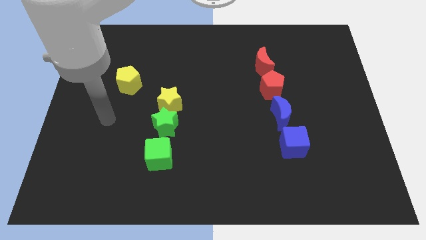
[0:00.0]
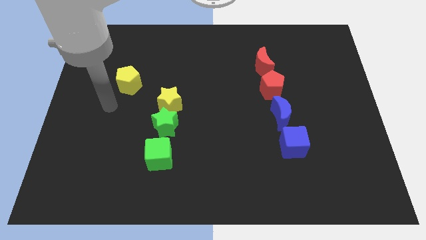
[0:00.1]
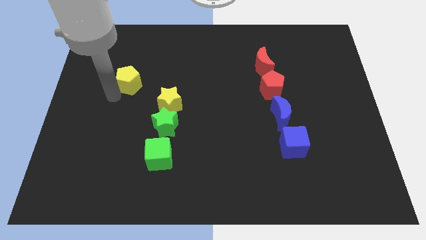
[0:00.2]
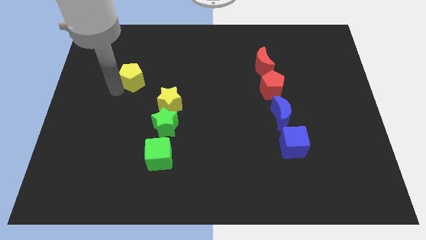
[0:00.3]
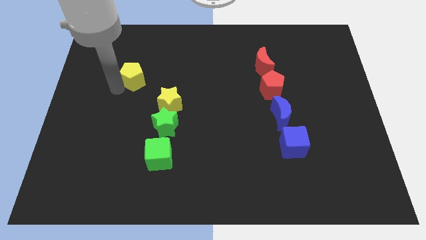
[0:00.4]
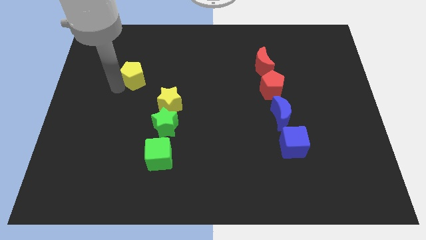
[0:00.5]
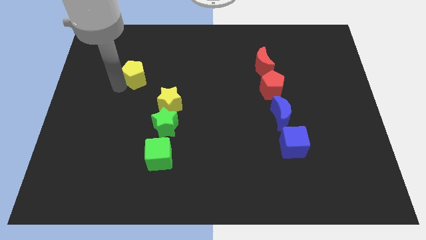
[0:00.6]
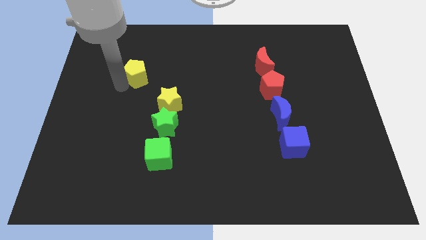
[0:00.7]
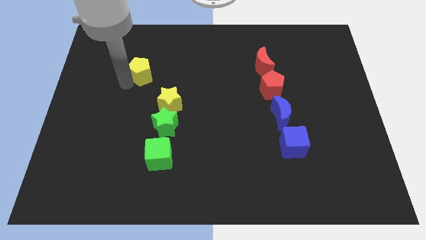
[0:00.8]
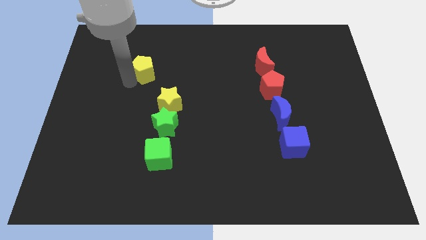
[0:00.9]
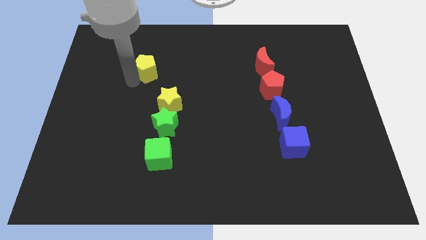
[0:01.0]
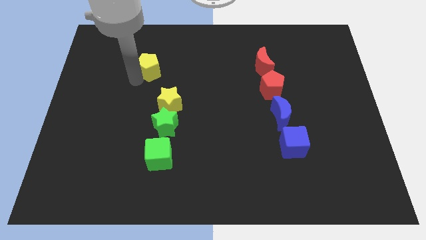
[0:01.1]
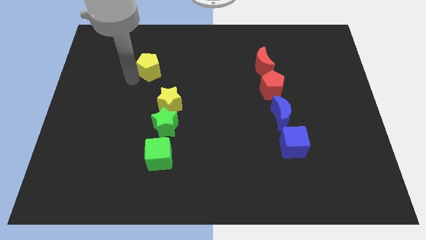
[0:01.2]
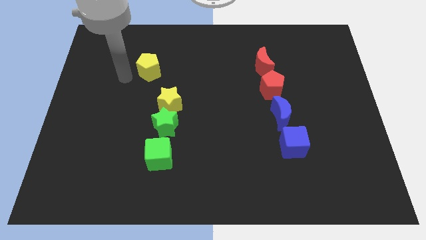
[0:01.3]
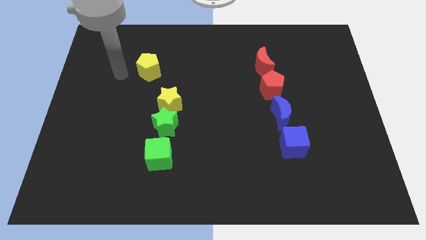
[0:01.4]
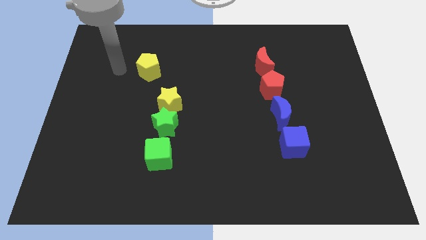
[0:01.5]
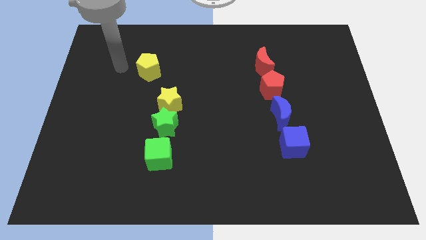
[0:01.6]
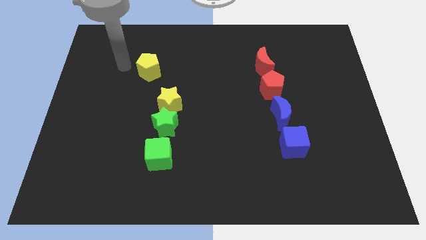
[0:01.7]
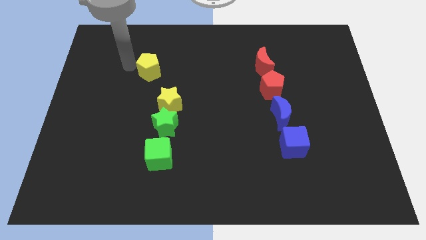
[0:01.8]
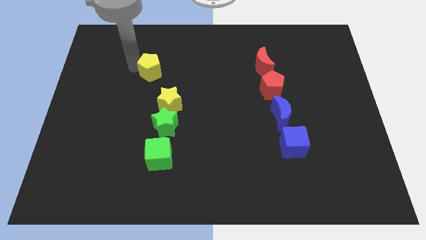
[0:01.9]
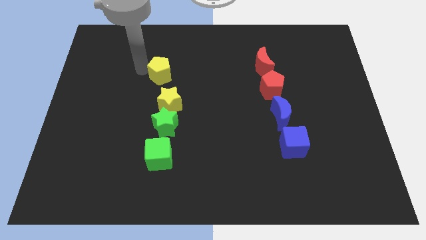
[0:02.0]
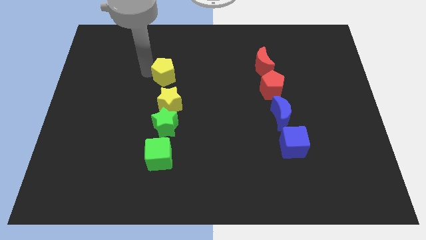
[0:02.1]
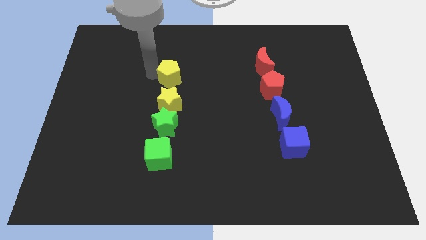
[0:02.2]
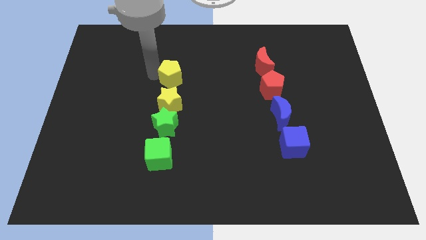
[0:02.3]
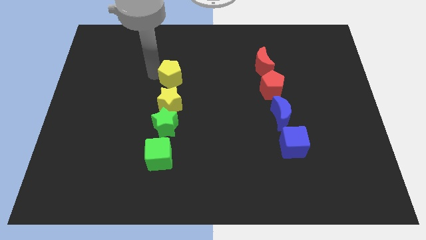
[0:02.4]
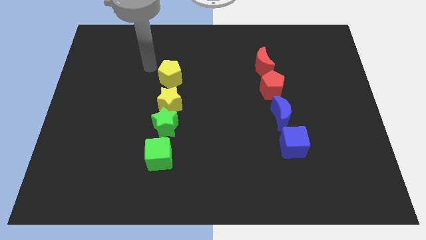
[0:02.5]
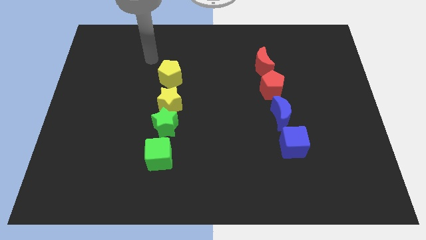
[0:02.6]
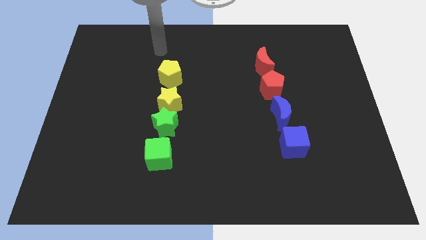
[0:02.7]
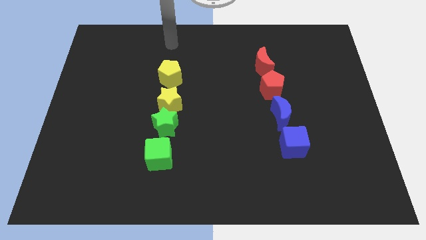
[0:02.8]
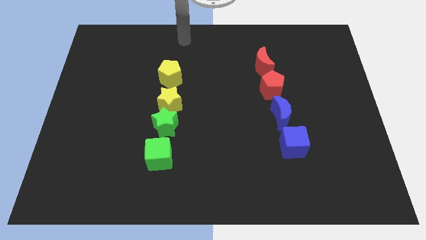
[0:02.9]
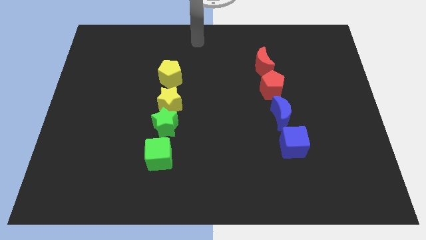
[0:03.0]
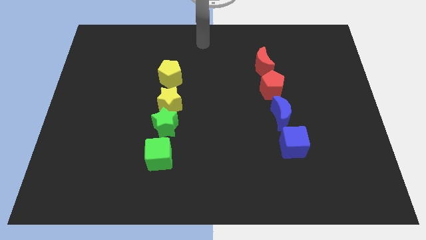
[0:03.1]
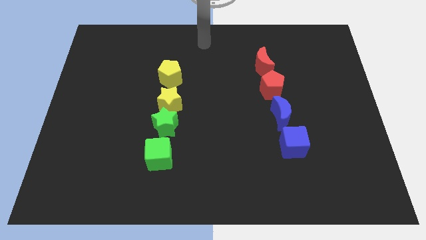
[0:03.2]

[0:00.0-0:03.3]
place the yellow pentagon to the top of yellow star

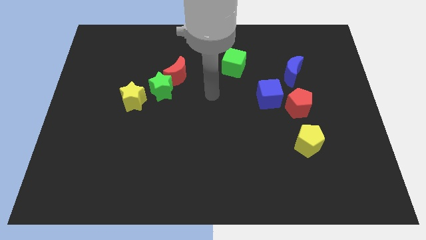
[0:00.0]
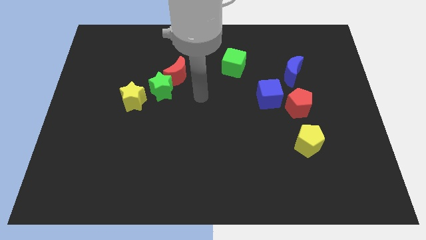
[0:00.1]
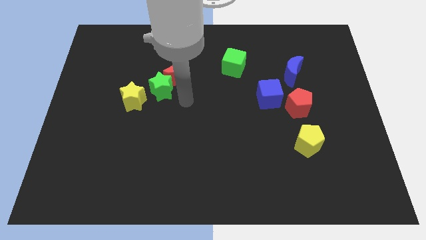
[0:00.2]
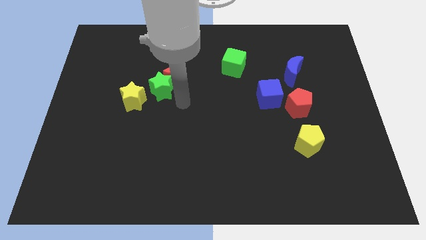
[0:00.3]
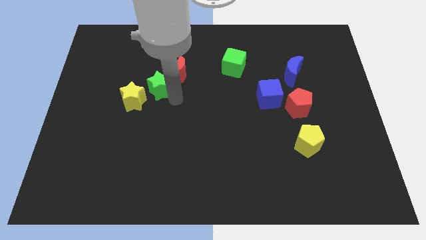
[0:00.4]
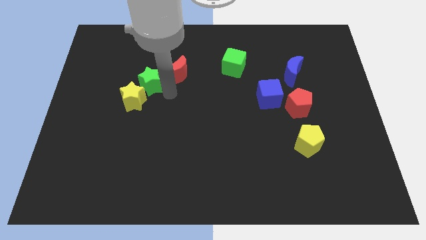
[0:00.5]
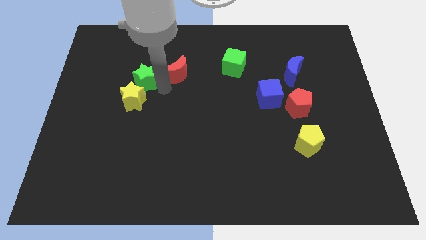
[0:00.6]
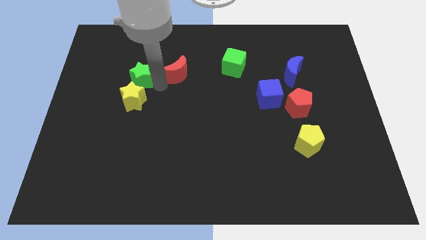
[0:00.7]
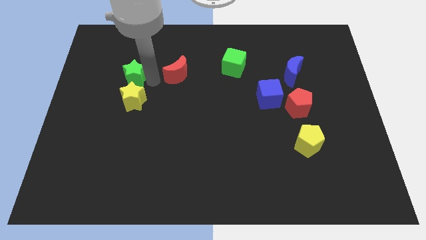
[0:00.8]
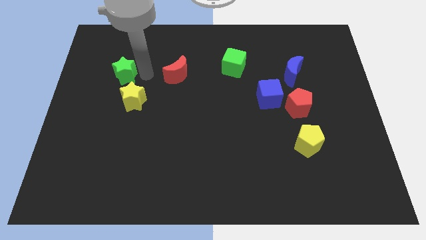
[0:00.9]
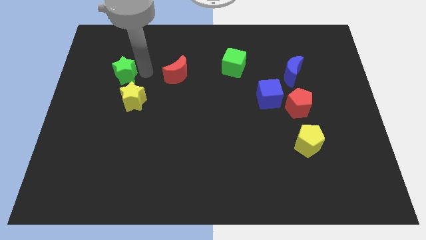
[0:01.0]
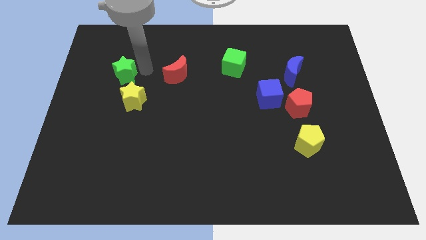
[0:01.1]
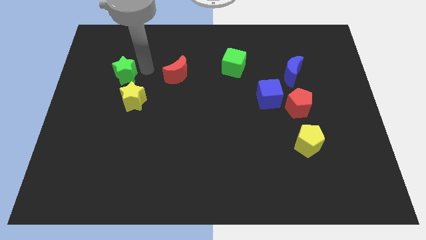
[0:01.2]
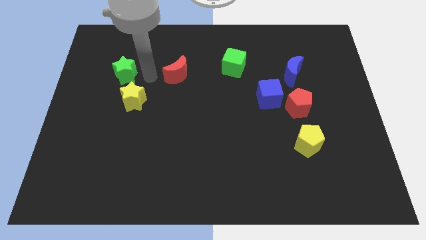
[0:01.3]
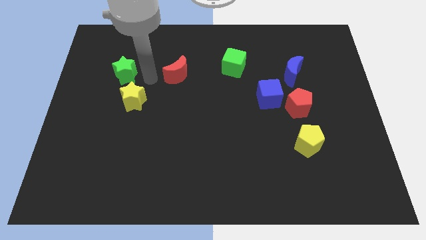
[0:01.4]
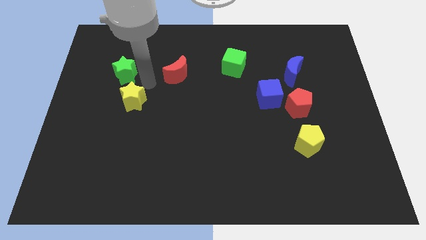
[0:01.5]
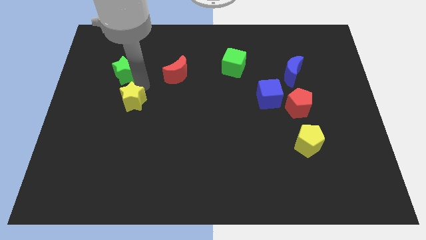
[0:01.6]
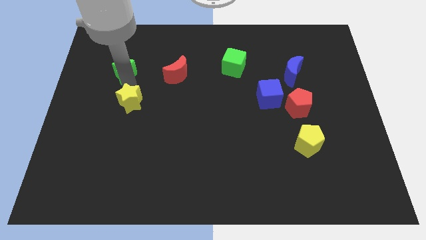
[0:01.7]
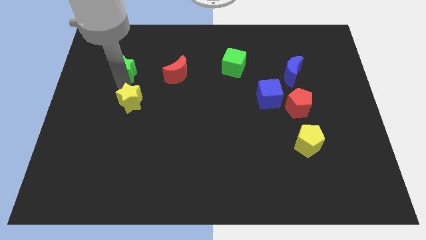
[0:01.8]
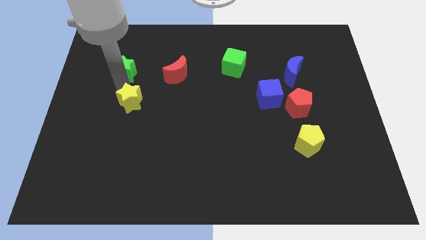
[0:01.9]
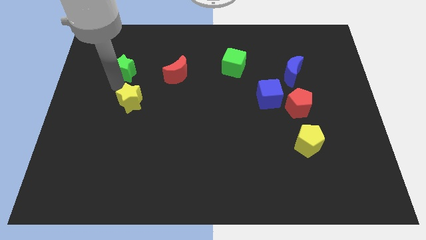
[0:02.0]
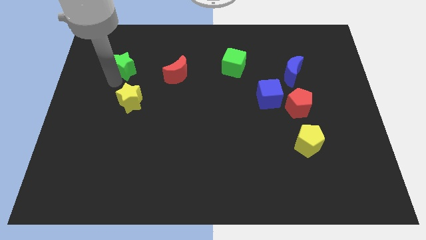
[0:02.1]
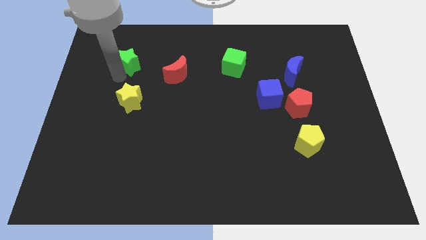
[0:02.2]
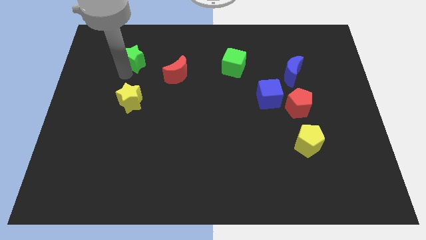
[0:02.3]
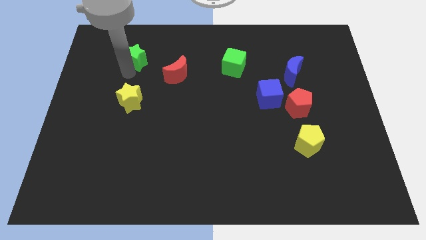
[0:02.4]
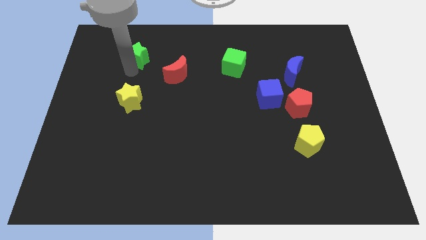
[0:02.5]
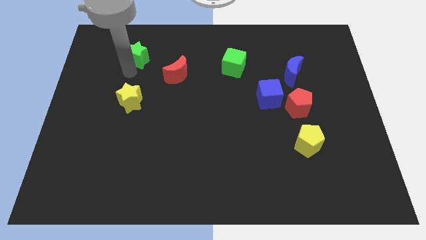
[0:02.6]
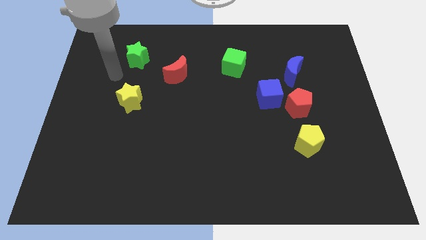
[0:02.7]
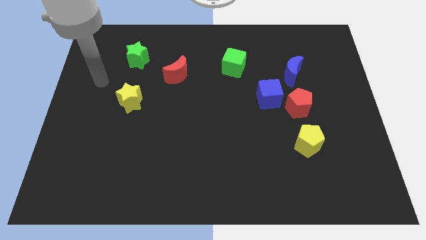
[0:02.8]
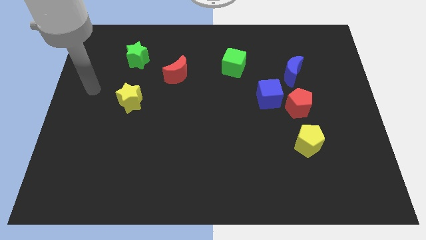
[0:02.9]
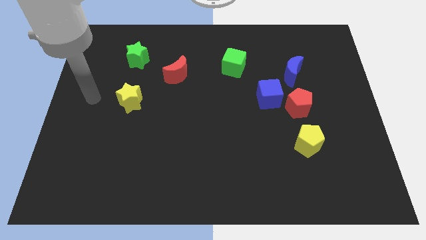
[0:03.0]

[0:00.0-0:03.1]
separate green star and yellow star

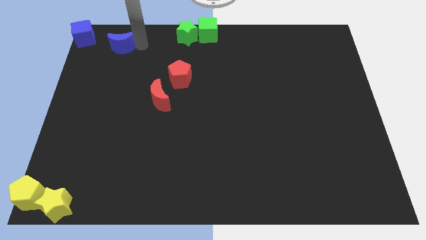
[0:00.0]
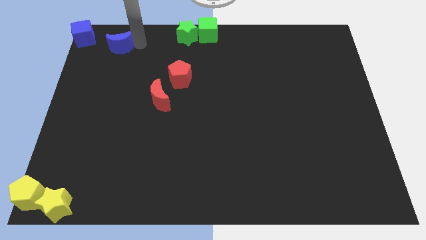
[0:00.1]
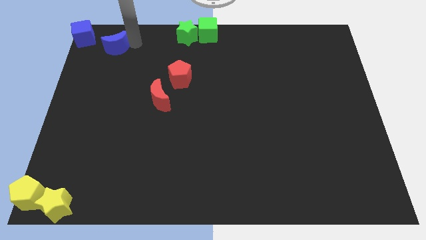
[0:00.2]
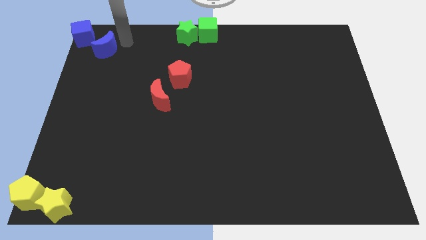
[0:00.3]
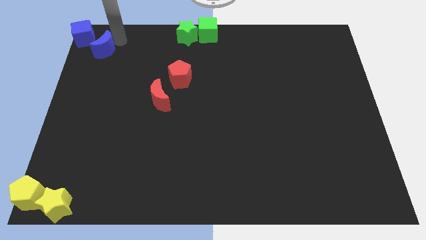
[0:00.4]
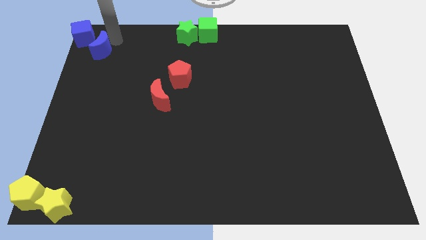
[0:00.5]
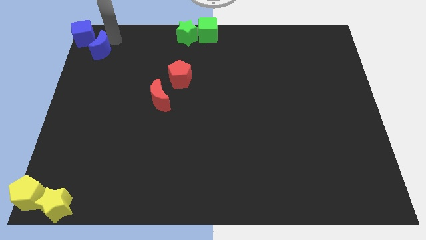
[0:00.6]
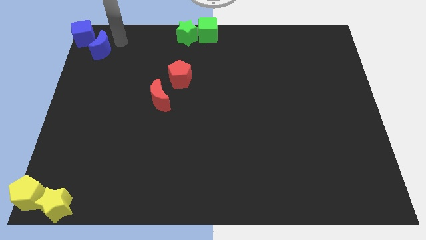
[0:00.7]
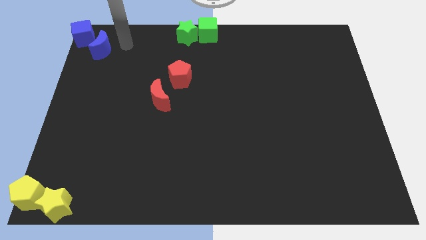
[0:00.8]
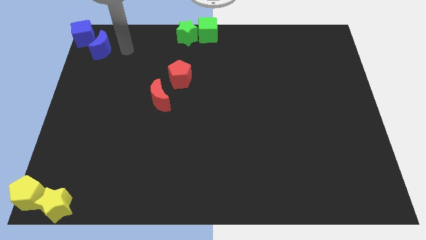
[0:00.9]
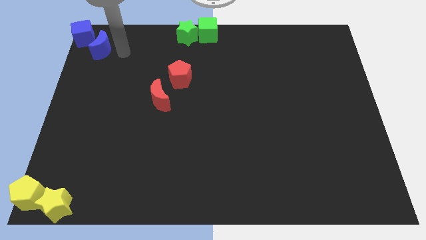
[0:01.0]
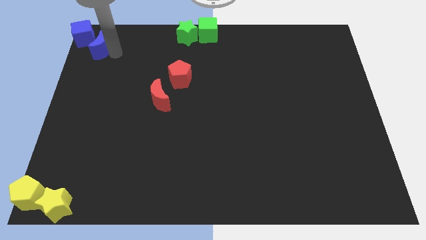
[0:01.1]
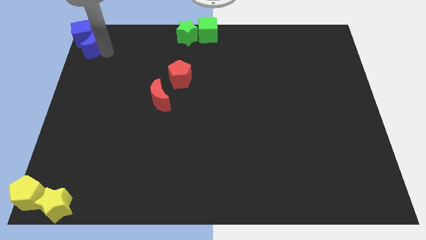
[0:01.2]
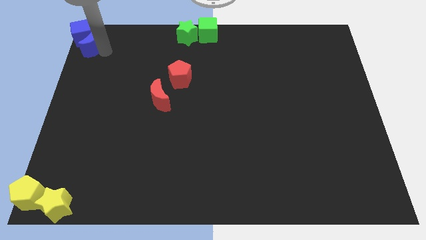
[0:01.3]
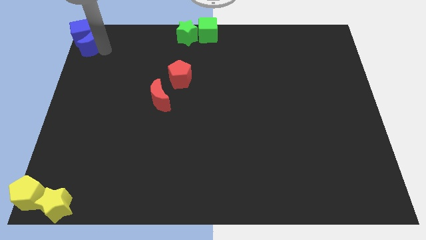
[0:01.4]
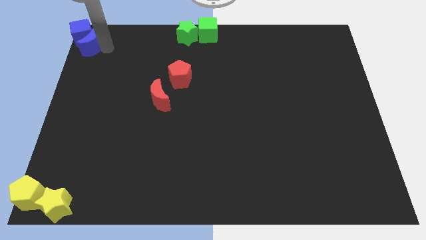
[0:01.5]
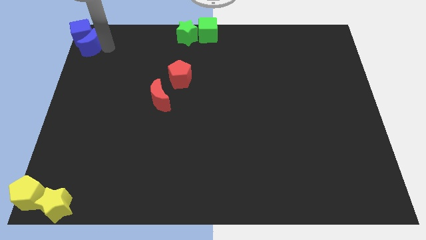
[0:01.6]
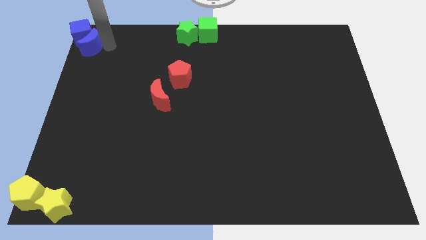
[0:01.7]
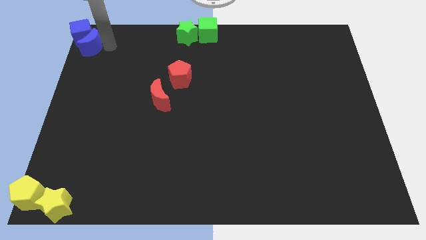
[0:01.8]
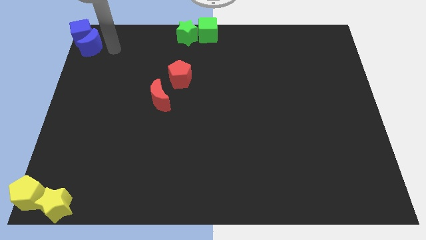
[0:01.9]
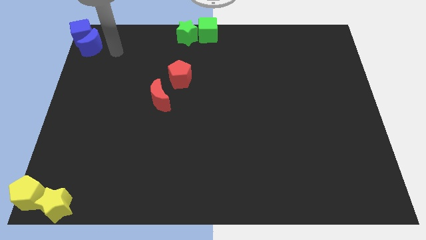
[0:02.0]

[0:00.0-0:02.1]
push the blue crescent towards the bottom of the blue cube

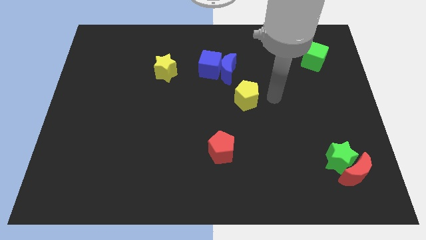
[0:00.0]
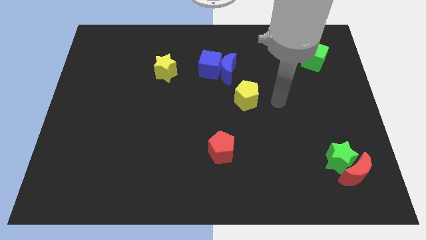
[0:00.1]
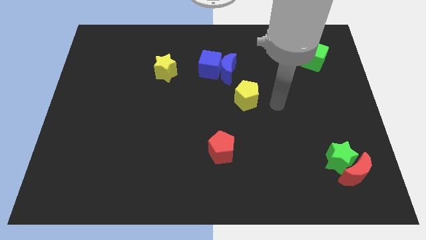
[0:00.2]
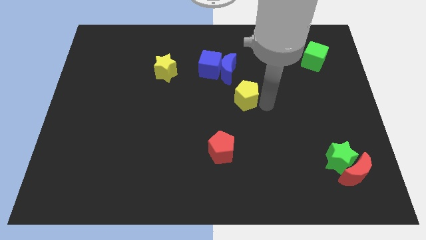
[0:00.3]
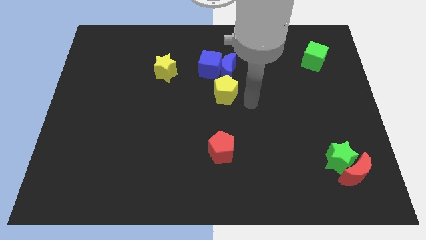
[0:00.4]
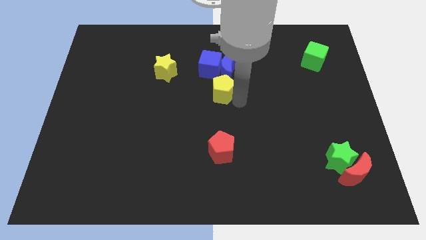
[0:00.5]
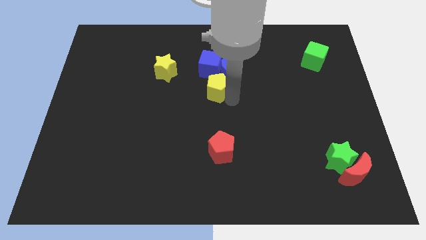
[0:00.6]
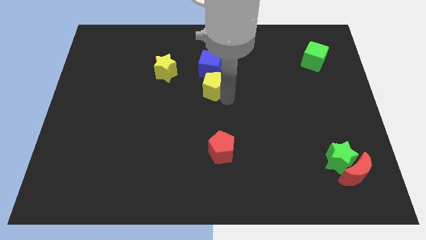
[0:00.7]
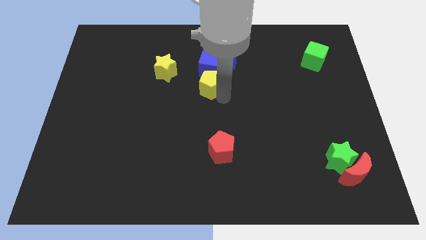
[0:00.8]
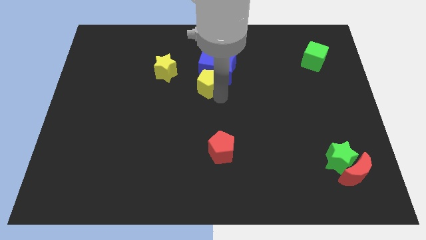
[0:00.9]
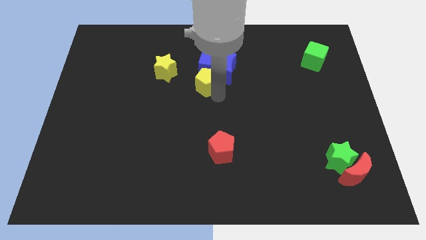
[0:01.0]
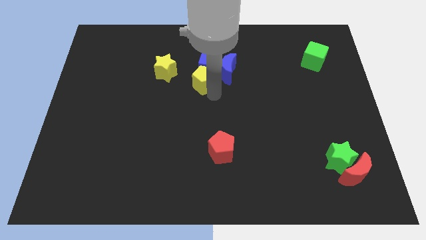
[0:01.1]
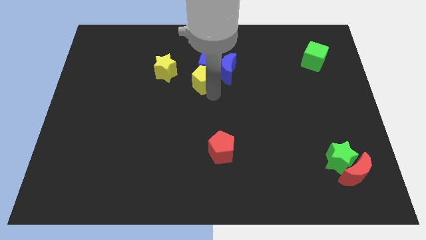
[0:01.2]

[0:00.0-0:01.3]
push the yellow pentagon to the bottom of the blue cube
